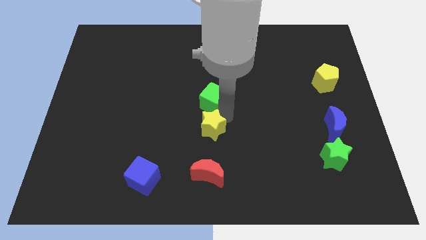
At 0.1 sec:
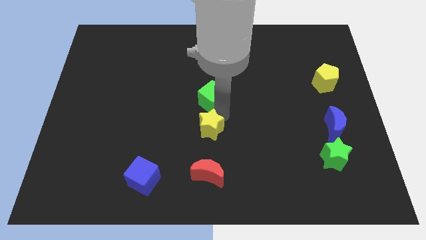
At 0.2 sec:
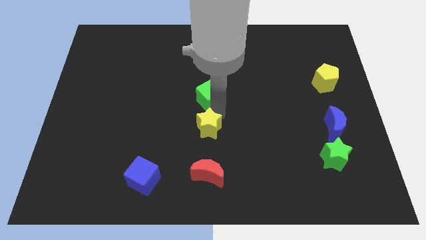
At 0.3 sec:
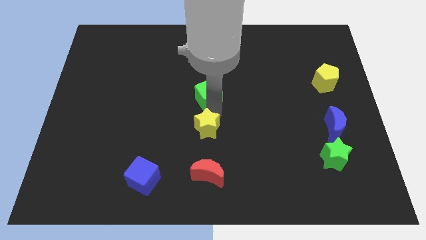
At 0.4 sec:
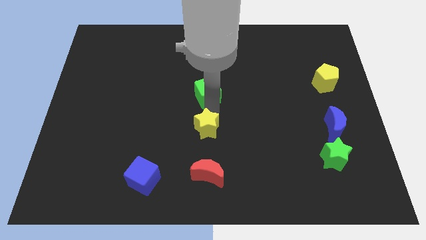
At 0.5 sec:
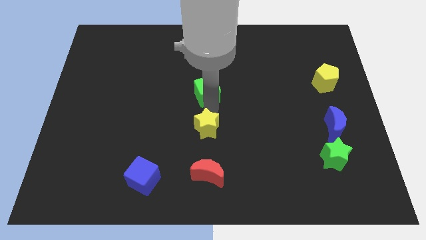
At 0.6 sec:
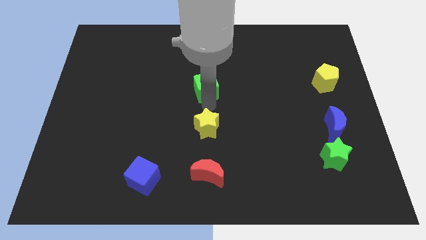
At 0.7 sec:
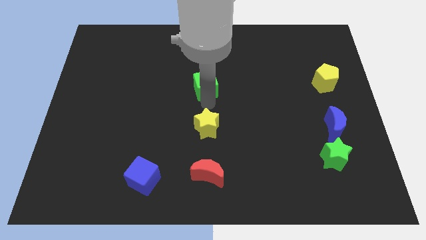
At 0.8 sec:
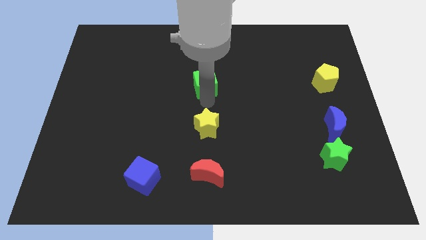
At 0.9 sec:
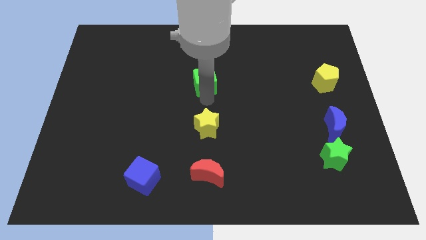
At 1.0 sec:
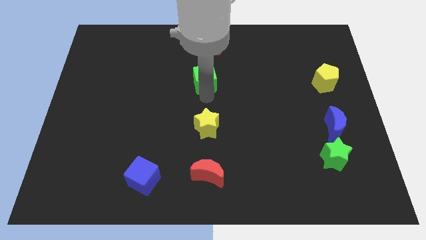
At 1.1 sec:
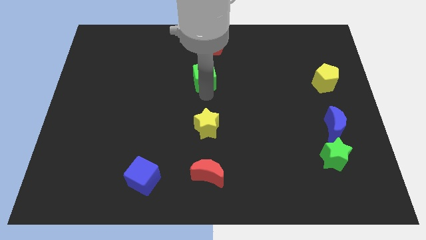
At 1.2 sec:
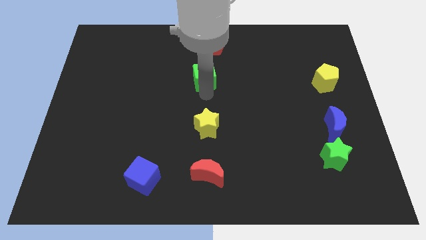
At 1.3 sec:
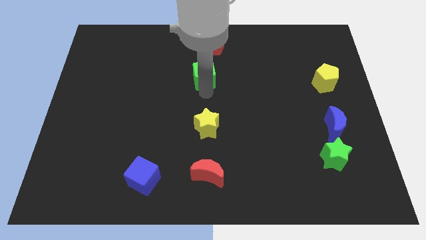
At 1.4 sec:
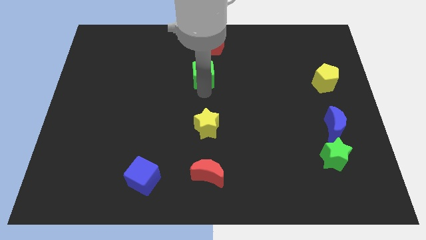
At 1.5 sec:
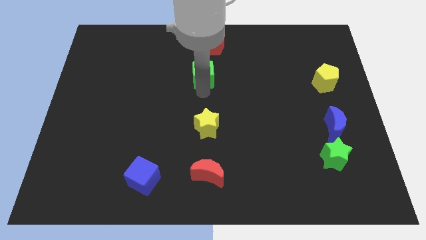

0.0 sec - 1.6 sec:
separate green cube from yellow star

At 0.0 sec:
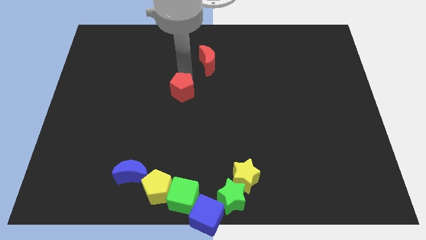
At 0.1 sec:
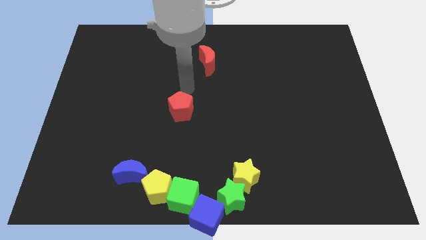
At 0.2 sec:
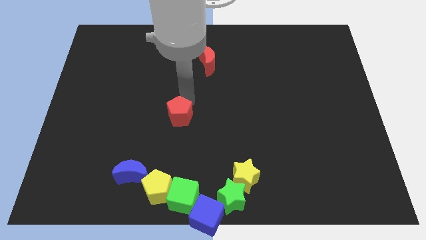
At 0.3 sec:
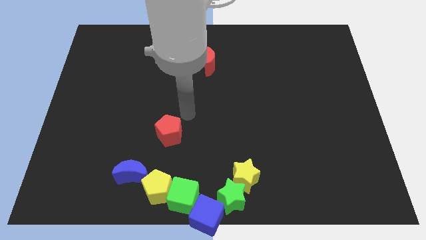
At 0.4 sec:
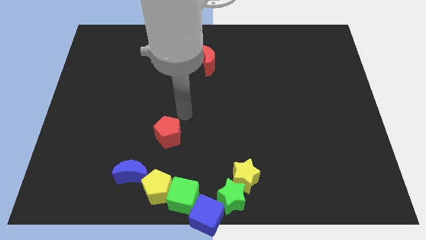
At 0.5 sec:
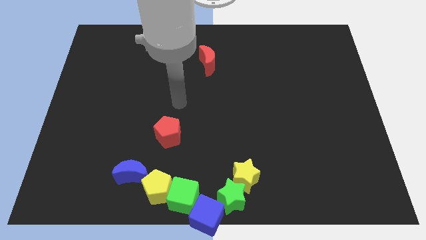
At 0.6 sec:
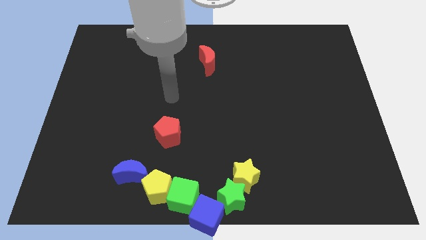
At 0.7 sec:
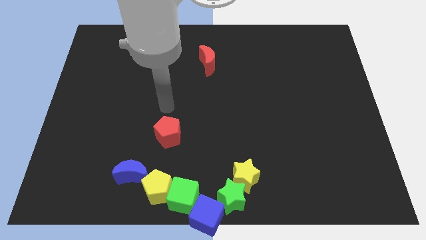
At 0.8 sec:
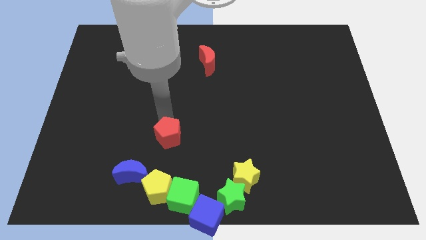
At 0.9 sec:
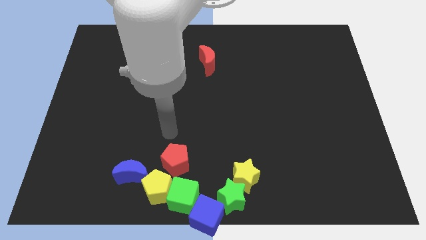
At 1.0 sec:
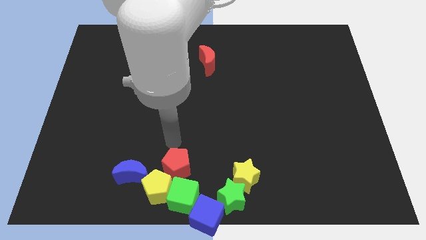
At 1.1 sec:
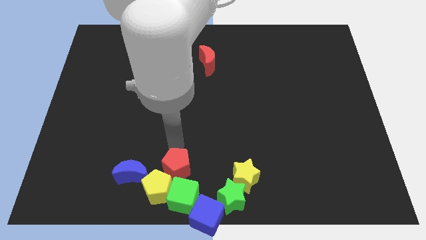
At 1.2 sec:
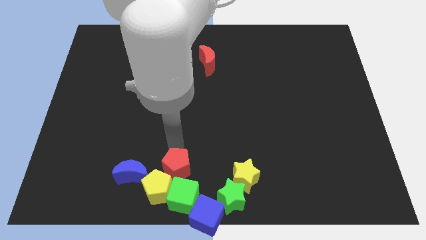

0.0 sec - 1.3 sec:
move the red pentagon at the top right side of the yellow pentagon

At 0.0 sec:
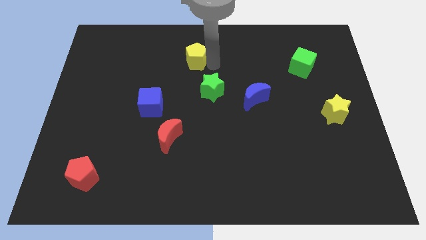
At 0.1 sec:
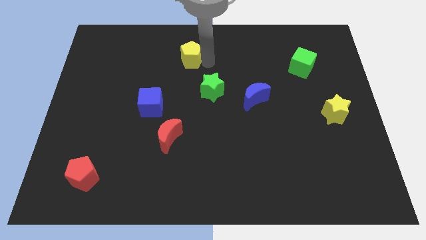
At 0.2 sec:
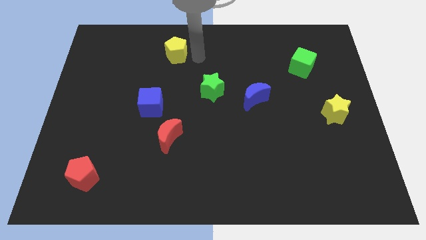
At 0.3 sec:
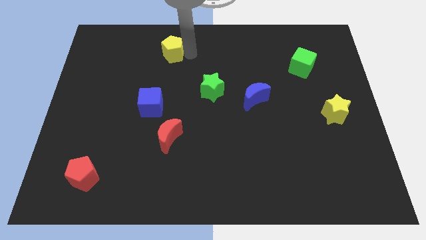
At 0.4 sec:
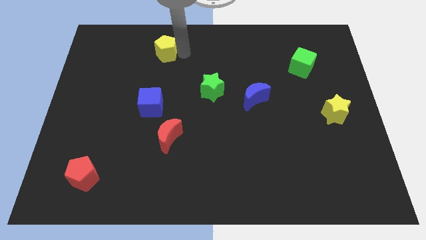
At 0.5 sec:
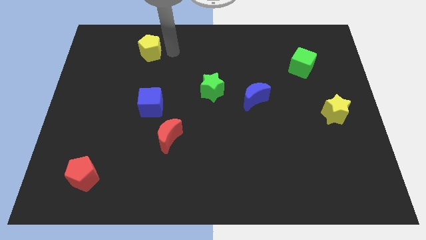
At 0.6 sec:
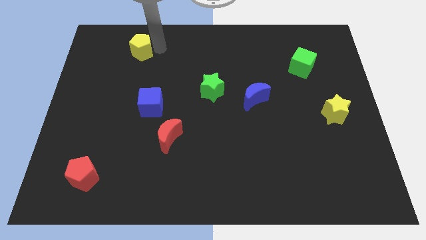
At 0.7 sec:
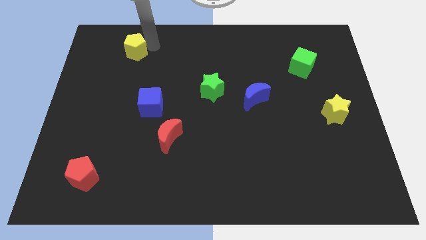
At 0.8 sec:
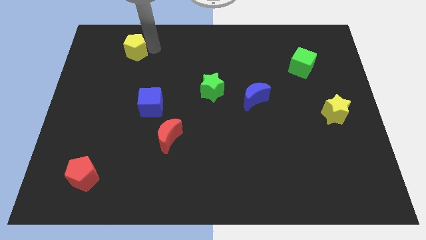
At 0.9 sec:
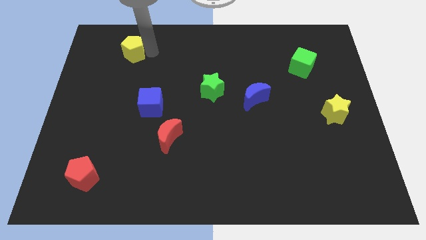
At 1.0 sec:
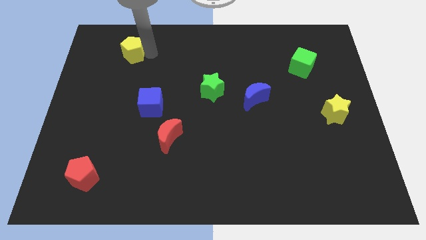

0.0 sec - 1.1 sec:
move the yellow pentgaon diagonally top left to the blue cube

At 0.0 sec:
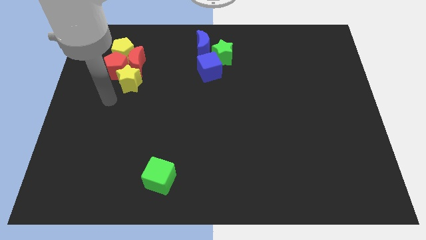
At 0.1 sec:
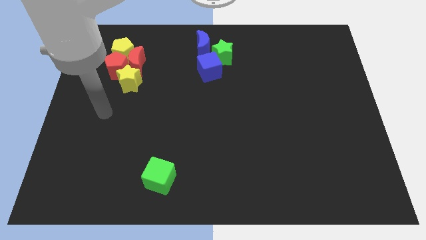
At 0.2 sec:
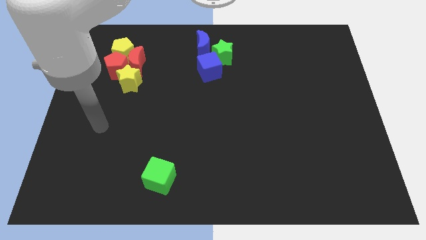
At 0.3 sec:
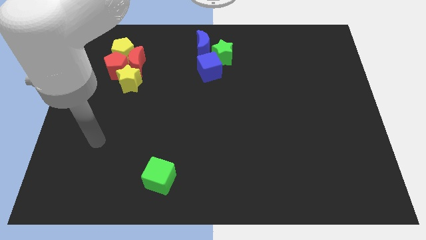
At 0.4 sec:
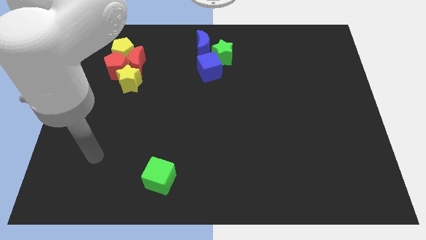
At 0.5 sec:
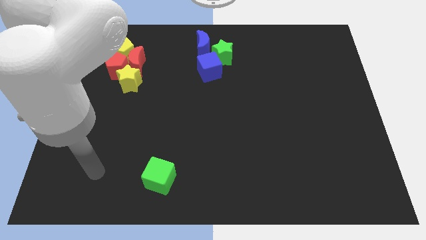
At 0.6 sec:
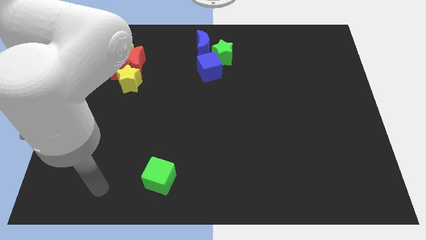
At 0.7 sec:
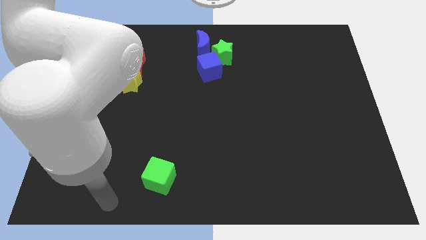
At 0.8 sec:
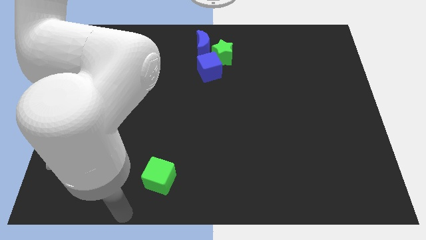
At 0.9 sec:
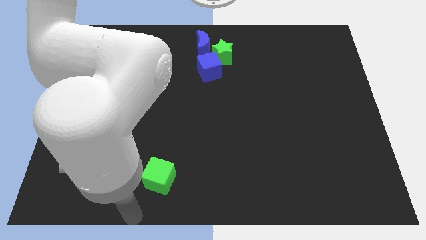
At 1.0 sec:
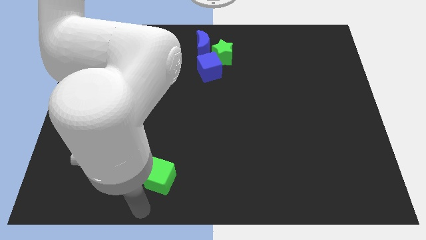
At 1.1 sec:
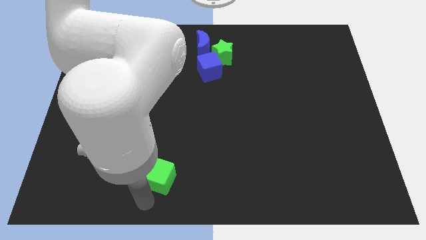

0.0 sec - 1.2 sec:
point the arm below the green cube

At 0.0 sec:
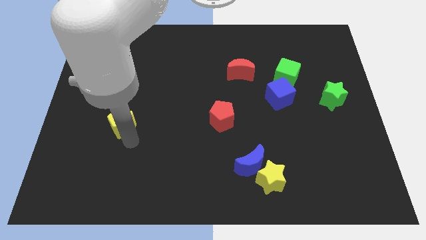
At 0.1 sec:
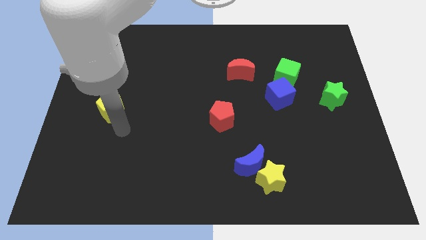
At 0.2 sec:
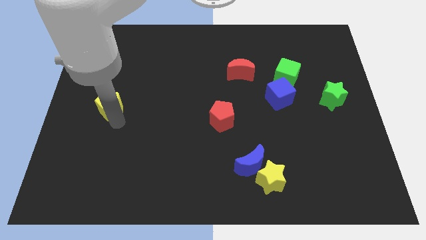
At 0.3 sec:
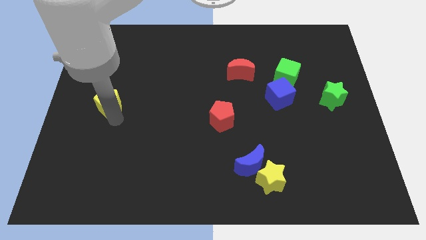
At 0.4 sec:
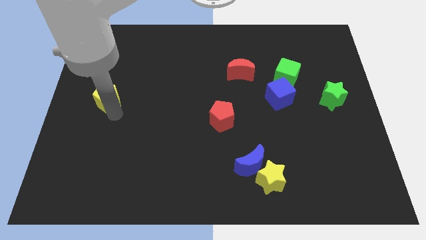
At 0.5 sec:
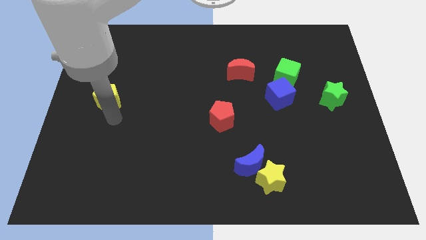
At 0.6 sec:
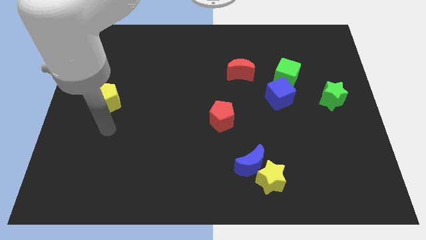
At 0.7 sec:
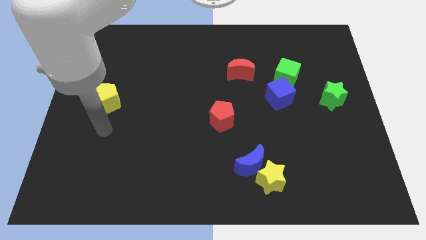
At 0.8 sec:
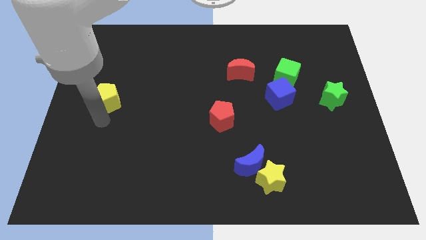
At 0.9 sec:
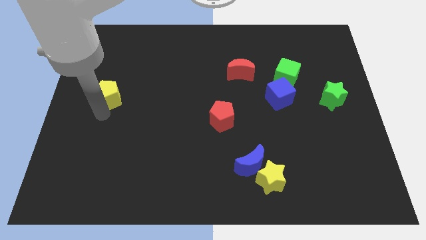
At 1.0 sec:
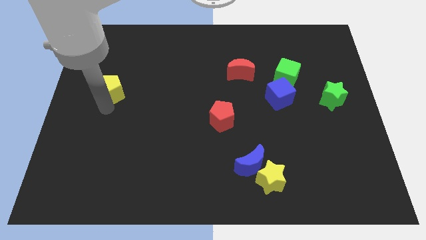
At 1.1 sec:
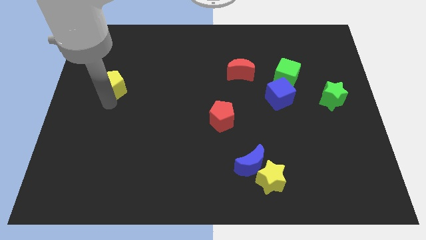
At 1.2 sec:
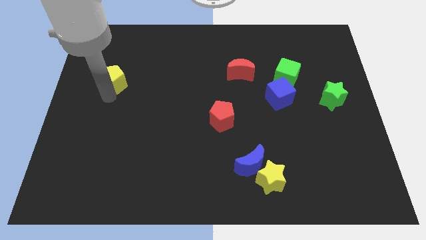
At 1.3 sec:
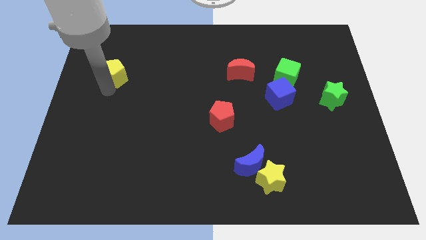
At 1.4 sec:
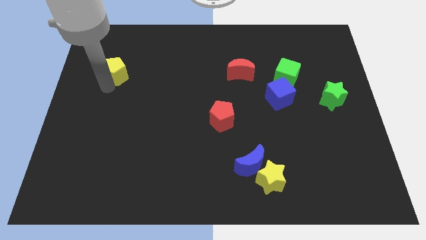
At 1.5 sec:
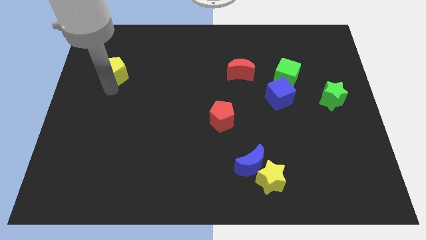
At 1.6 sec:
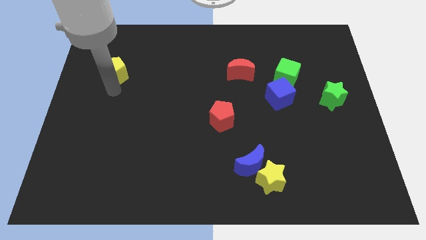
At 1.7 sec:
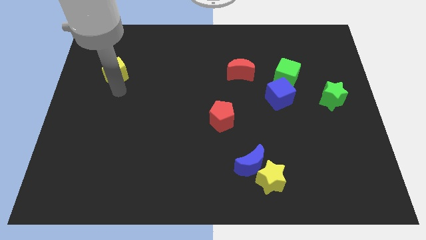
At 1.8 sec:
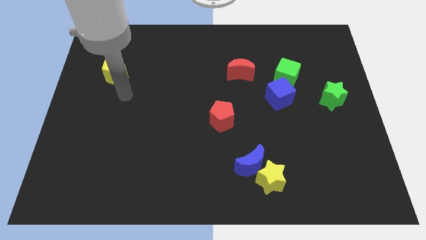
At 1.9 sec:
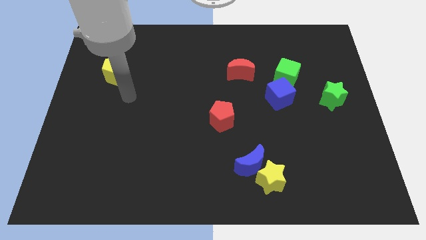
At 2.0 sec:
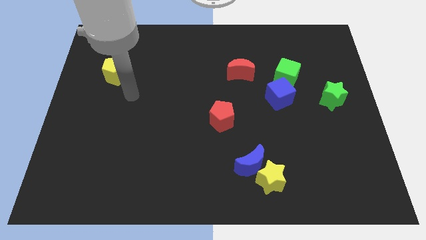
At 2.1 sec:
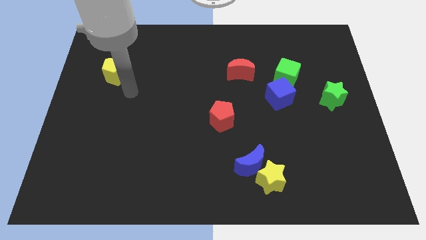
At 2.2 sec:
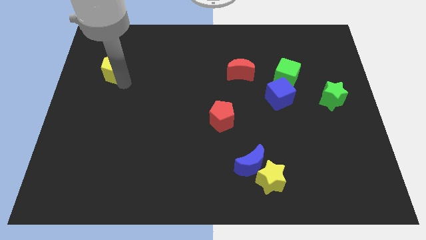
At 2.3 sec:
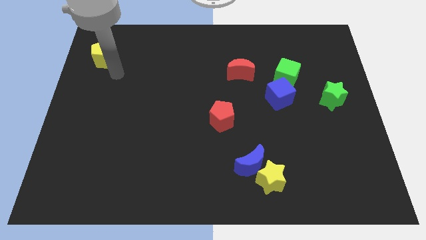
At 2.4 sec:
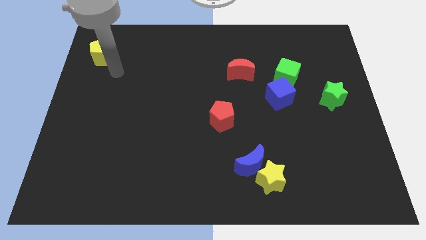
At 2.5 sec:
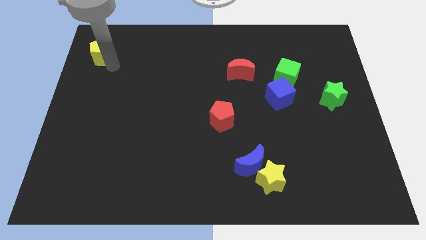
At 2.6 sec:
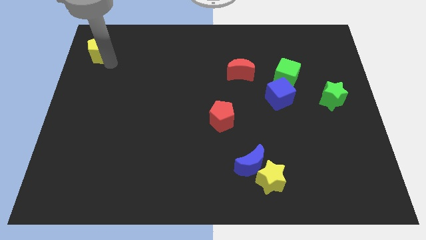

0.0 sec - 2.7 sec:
push yellow pentagon towards top left of the board

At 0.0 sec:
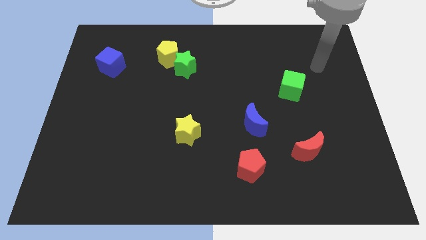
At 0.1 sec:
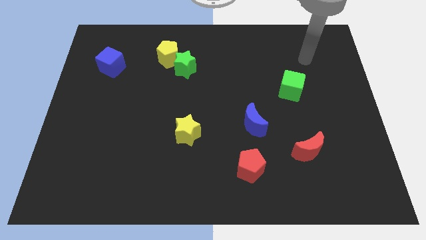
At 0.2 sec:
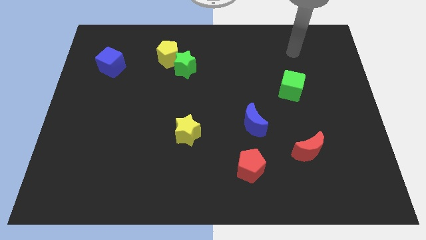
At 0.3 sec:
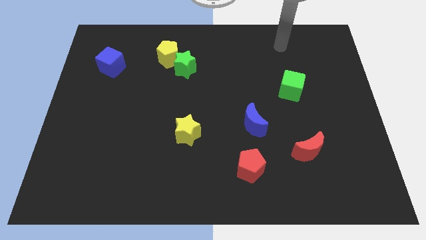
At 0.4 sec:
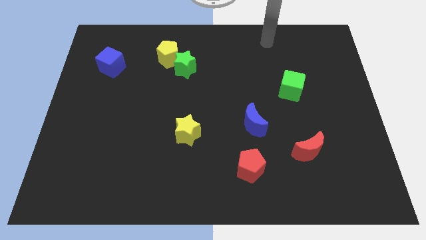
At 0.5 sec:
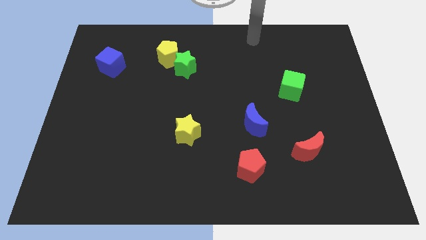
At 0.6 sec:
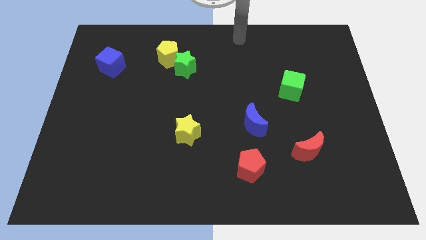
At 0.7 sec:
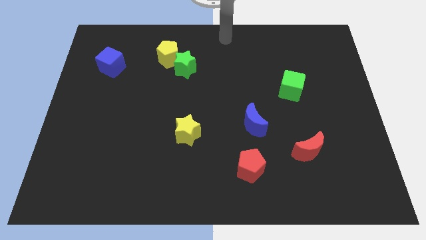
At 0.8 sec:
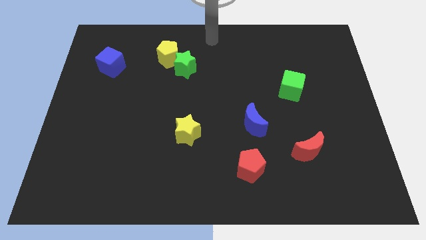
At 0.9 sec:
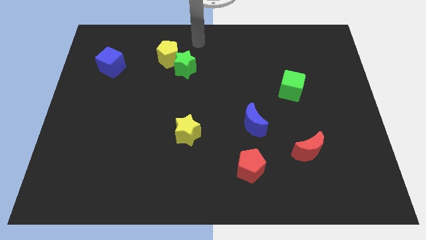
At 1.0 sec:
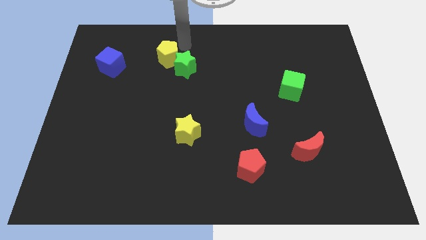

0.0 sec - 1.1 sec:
move your arm to the top right of the yellow pentagon
